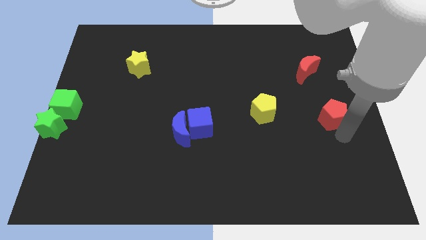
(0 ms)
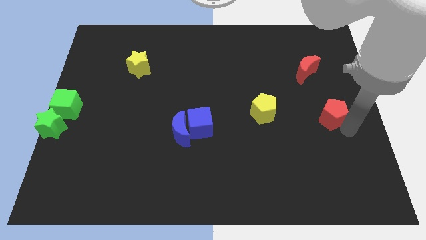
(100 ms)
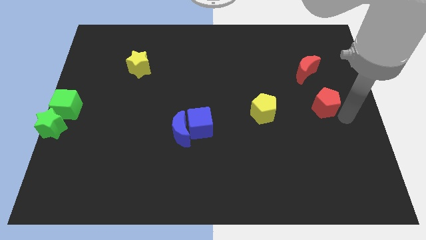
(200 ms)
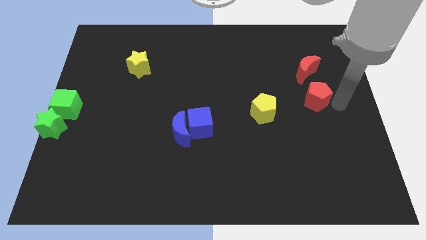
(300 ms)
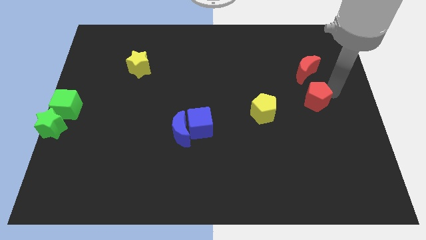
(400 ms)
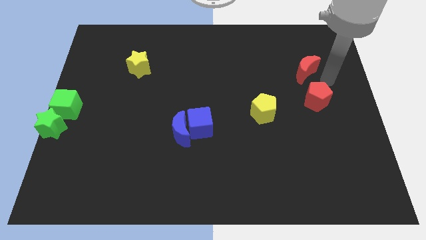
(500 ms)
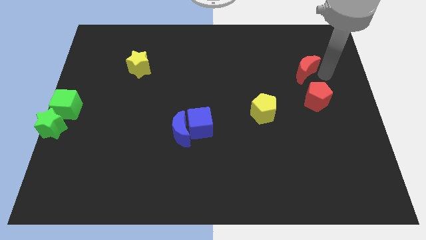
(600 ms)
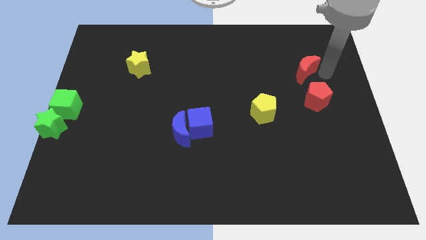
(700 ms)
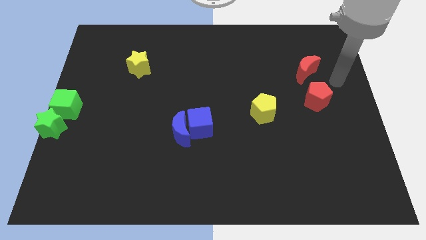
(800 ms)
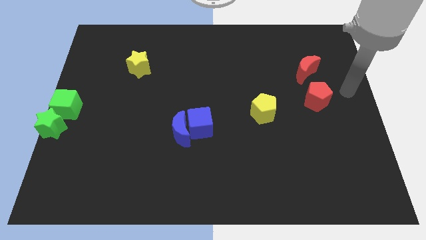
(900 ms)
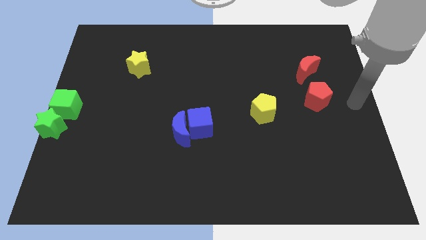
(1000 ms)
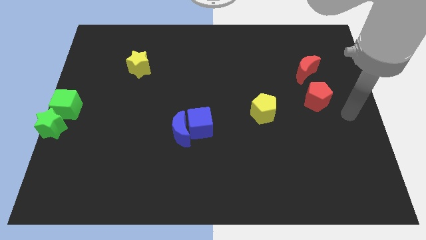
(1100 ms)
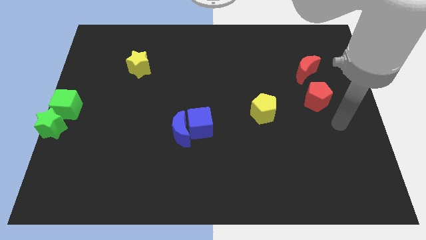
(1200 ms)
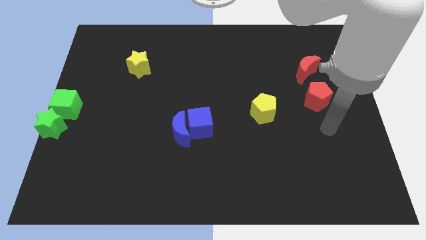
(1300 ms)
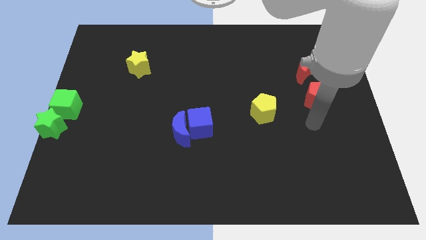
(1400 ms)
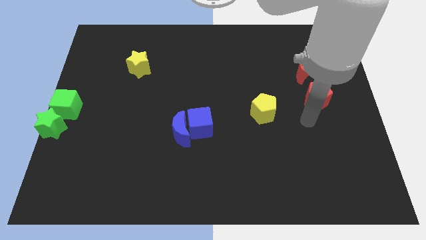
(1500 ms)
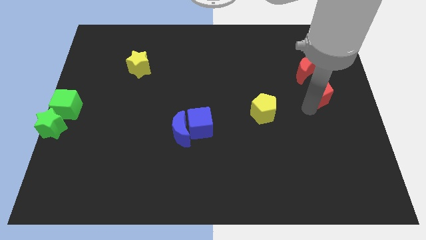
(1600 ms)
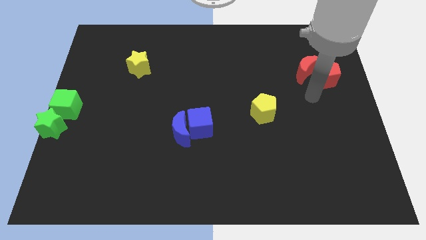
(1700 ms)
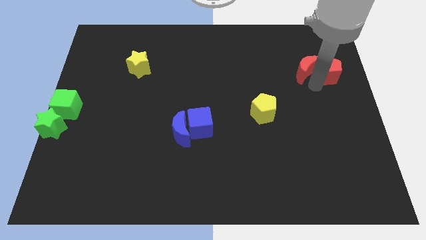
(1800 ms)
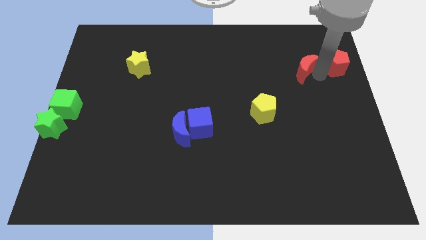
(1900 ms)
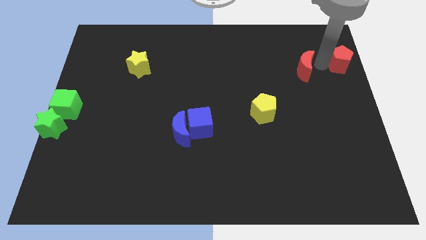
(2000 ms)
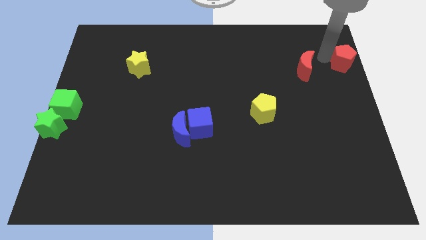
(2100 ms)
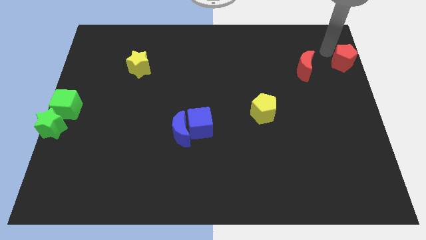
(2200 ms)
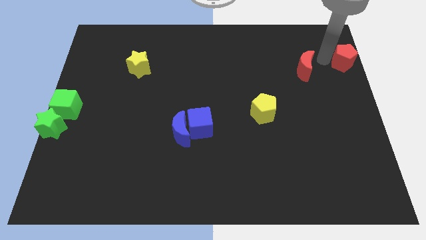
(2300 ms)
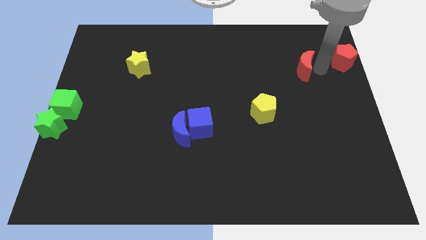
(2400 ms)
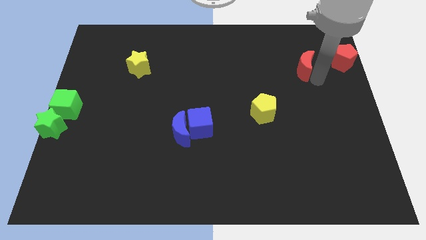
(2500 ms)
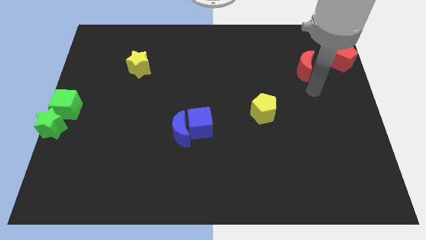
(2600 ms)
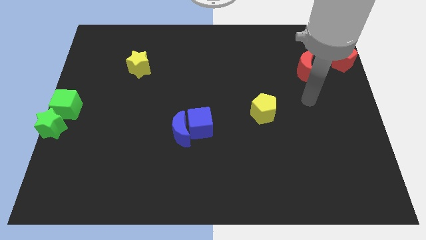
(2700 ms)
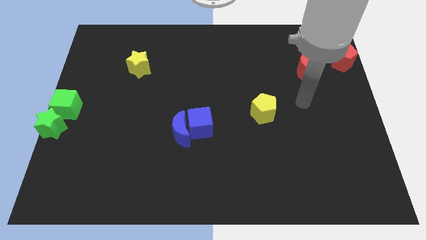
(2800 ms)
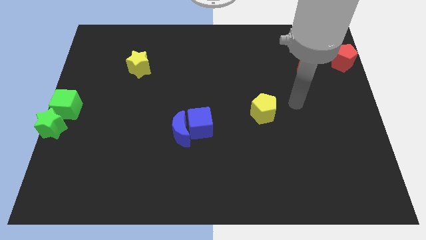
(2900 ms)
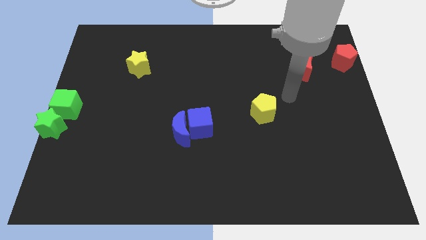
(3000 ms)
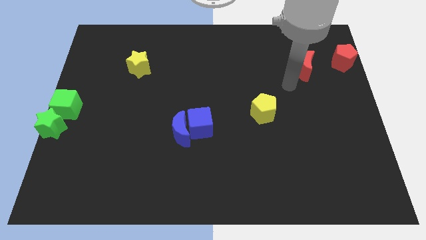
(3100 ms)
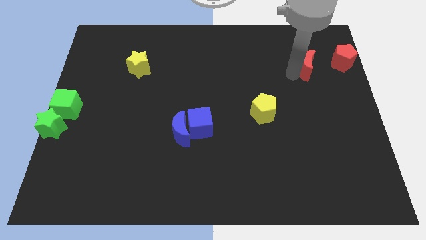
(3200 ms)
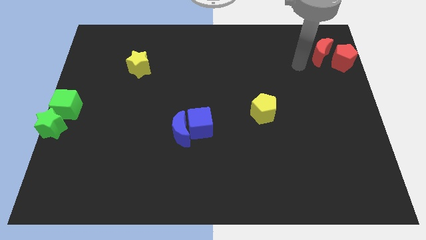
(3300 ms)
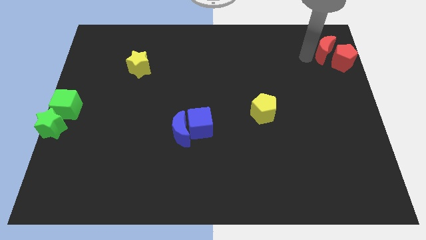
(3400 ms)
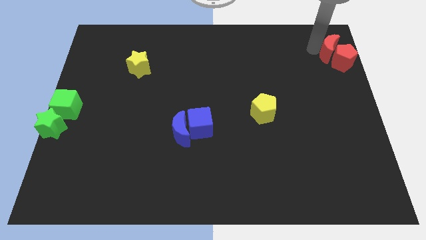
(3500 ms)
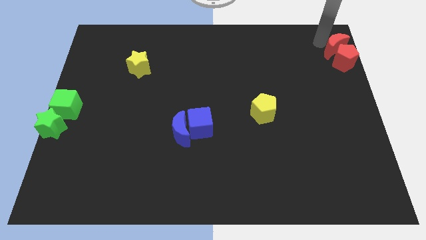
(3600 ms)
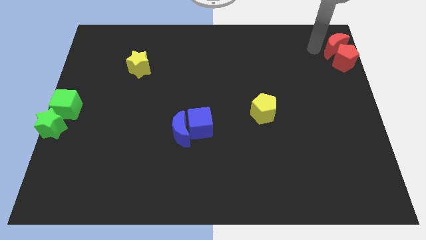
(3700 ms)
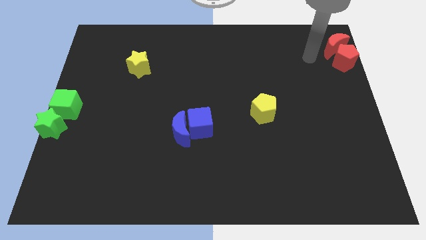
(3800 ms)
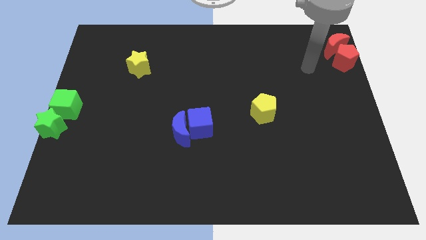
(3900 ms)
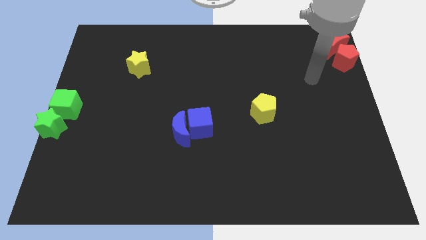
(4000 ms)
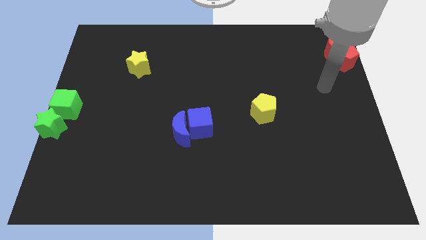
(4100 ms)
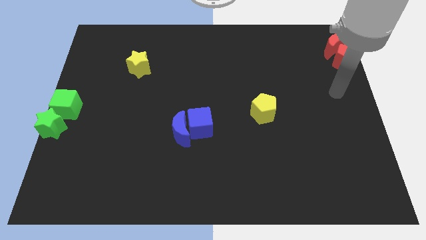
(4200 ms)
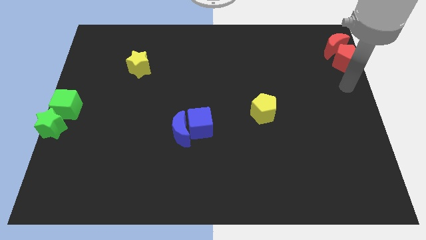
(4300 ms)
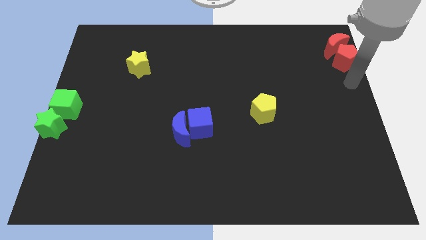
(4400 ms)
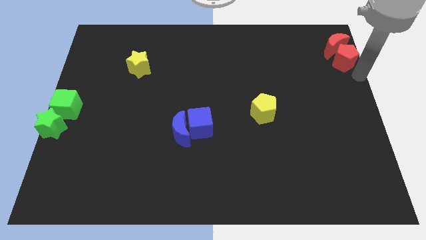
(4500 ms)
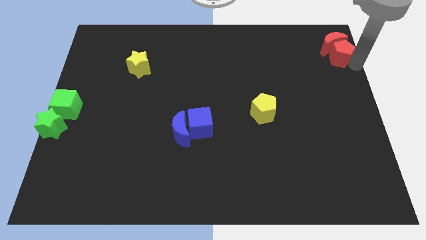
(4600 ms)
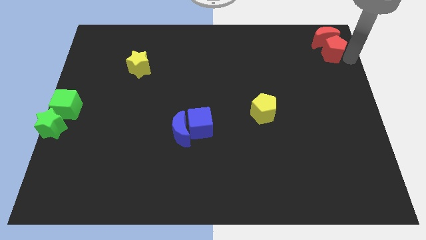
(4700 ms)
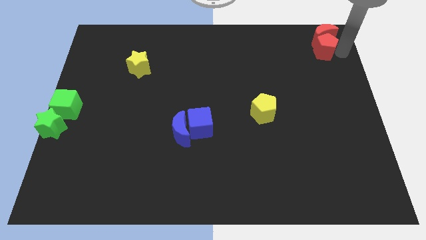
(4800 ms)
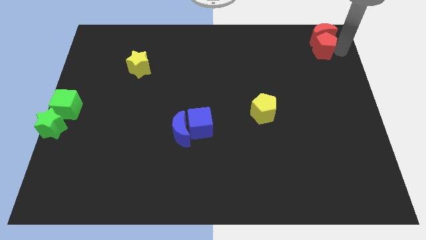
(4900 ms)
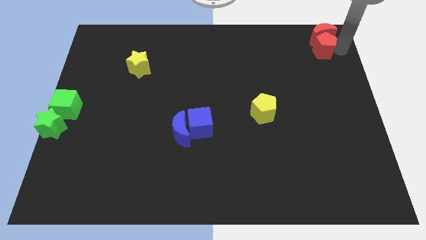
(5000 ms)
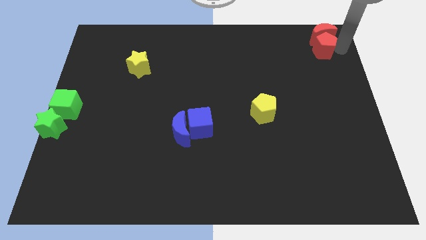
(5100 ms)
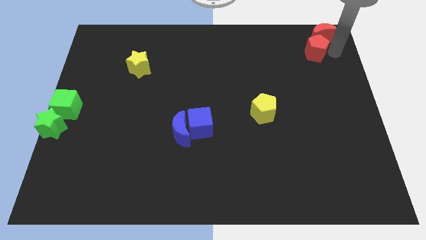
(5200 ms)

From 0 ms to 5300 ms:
move the two red blocks to the top right corner

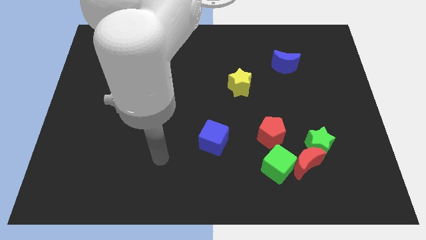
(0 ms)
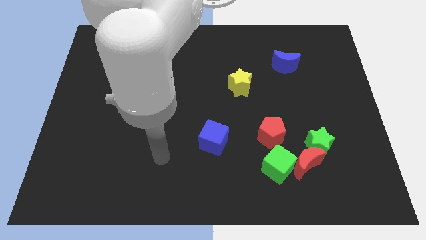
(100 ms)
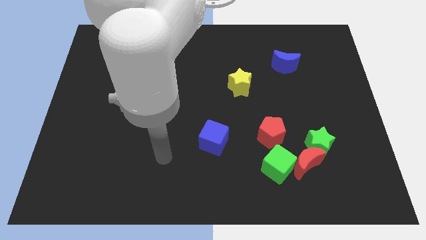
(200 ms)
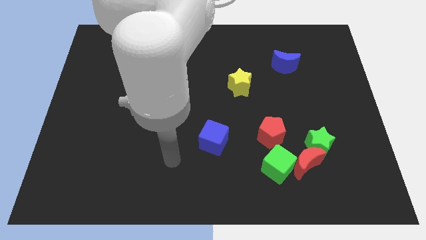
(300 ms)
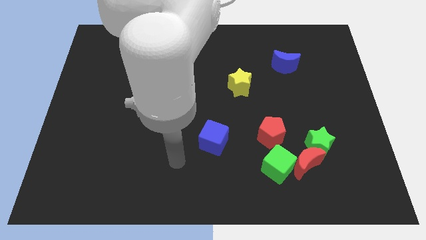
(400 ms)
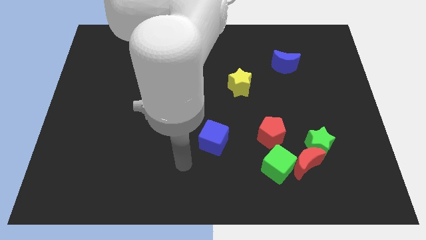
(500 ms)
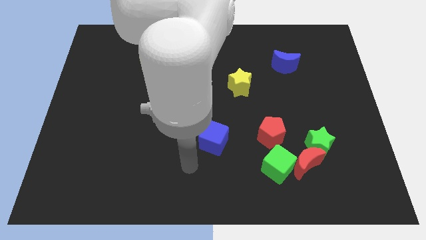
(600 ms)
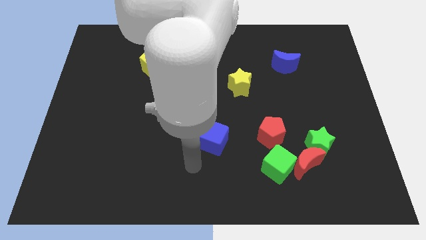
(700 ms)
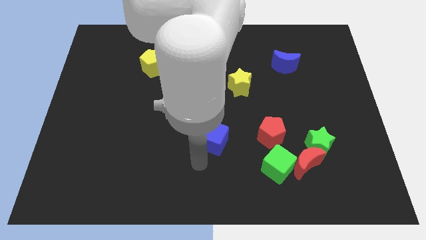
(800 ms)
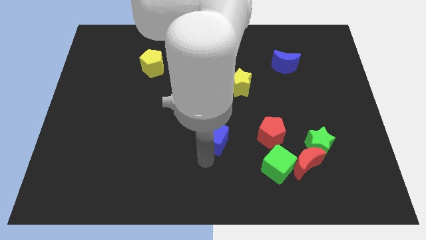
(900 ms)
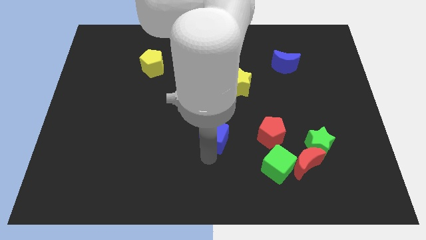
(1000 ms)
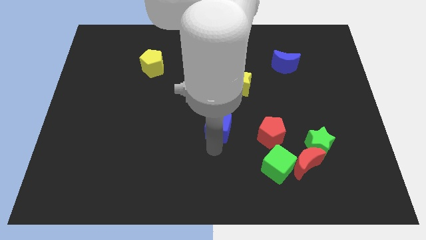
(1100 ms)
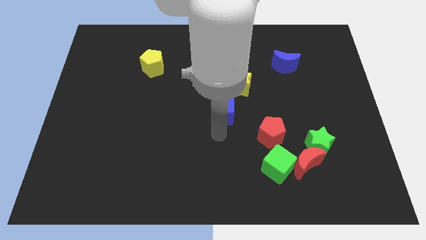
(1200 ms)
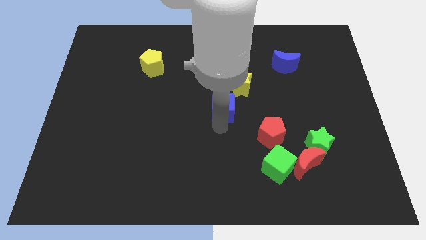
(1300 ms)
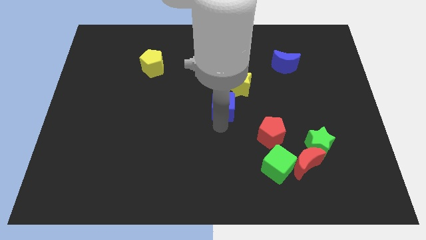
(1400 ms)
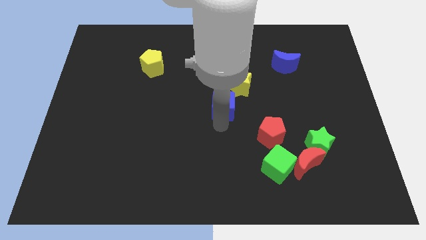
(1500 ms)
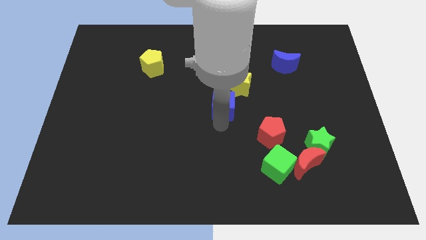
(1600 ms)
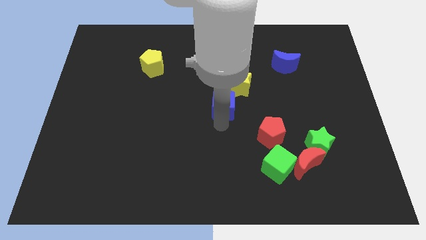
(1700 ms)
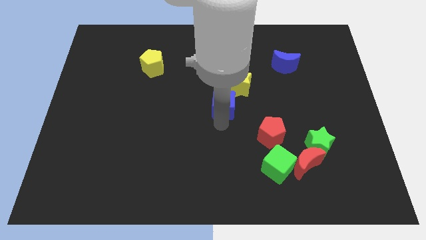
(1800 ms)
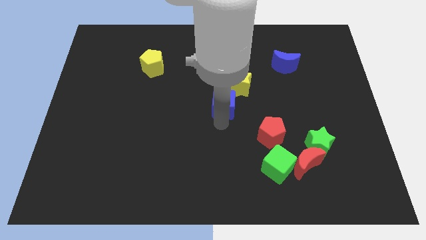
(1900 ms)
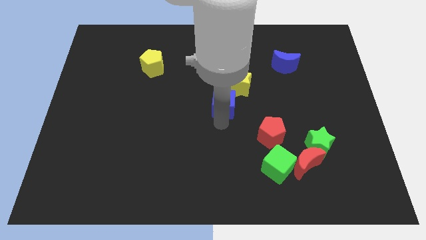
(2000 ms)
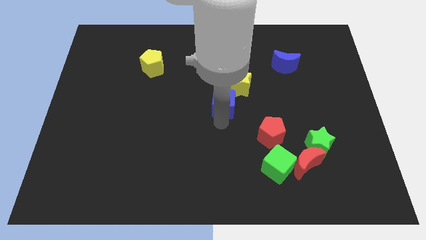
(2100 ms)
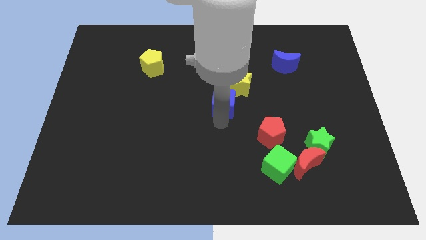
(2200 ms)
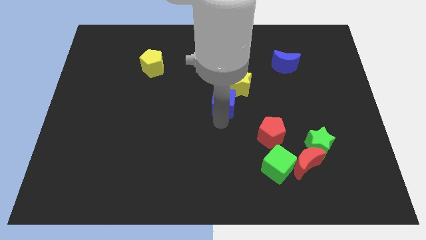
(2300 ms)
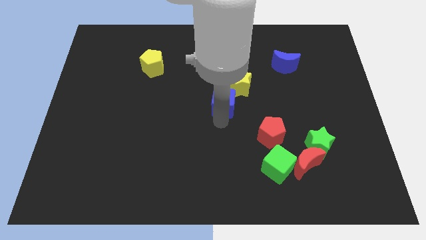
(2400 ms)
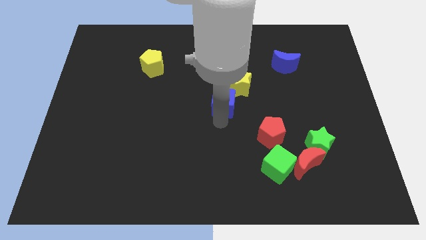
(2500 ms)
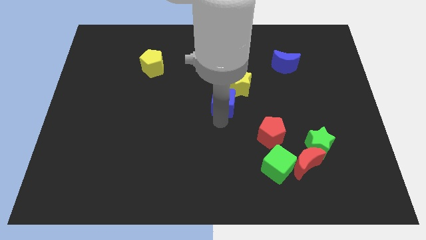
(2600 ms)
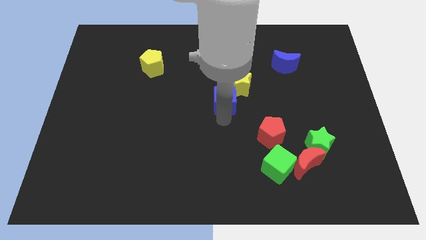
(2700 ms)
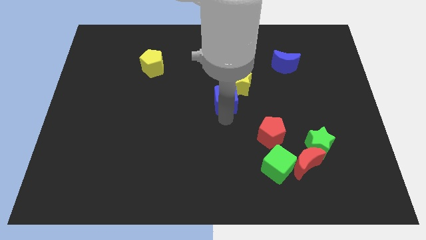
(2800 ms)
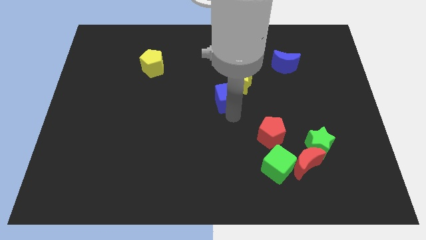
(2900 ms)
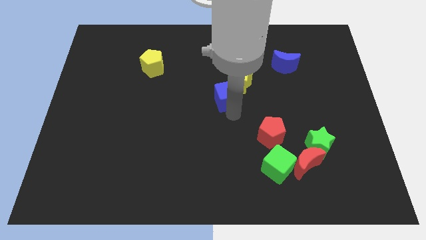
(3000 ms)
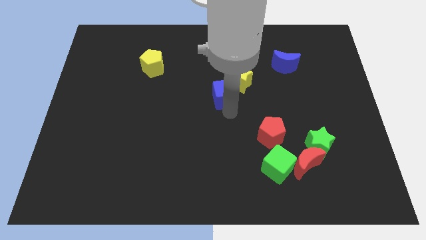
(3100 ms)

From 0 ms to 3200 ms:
move the blue cube into the yellow star from the bottom

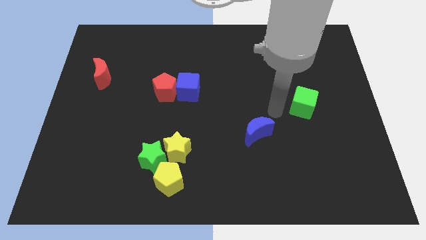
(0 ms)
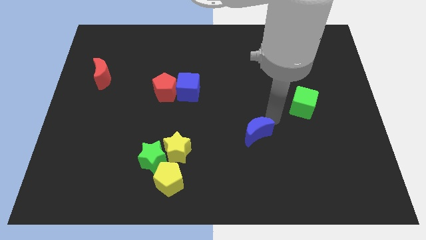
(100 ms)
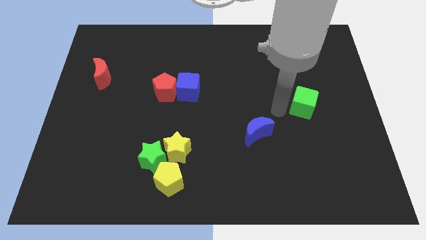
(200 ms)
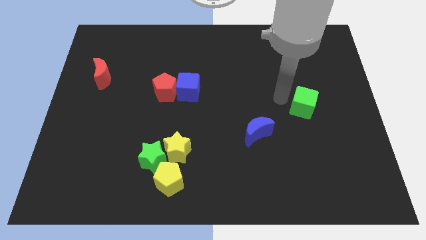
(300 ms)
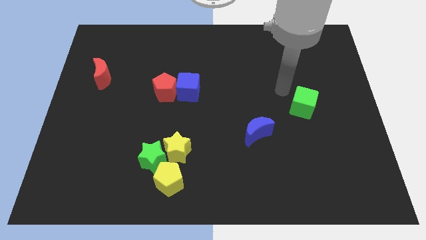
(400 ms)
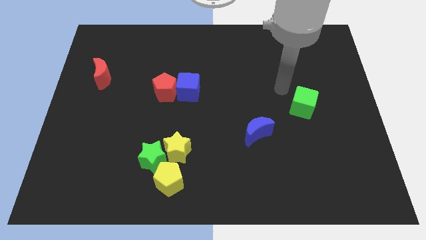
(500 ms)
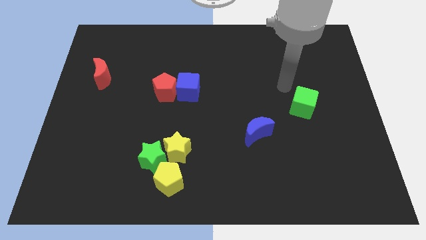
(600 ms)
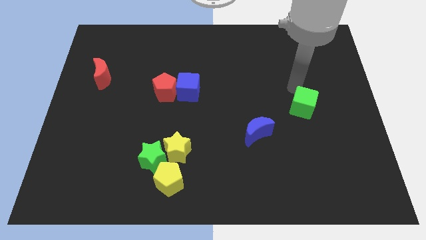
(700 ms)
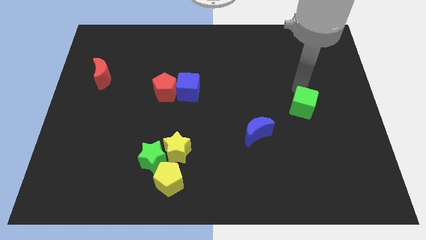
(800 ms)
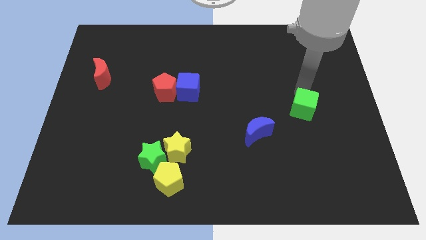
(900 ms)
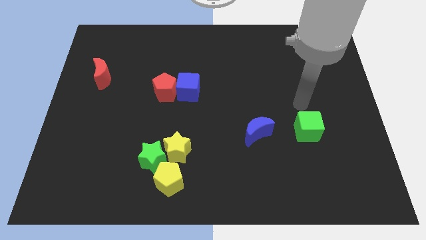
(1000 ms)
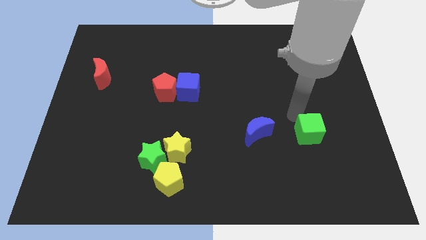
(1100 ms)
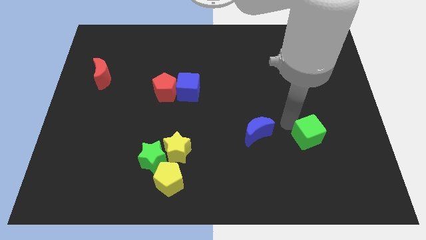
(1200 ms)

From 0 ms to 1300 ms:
place the green cube to the right of the blue moon
